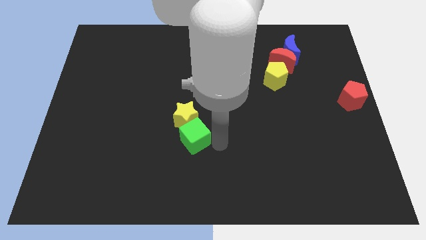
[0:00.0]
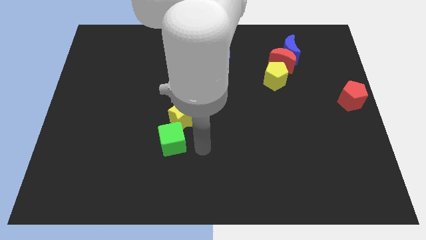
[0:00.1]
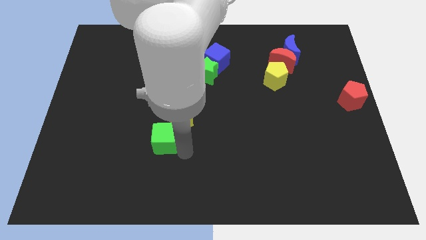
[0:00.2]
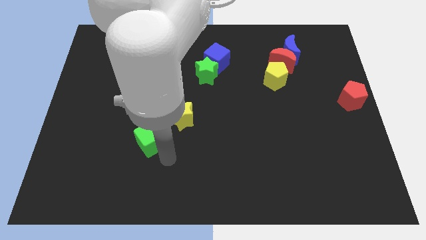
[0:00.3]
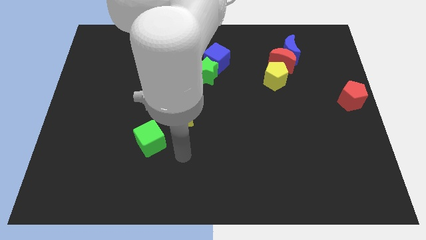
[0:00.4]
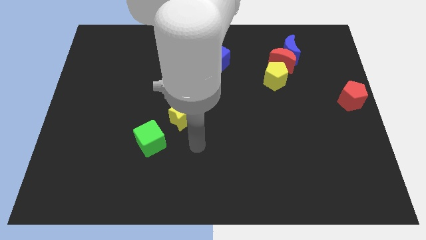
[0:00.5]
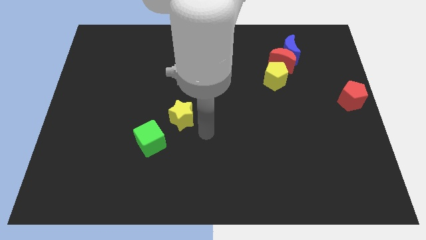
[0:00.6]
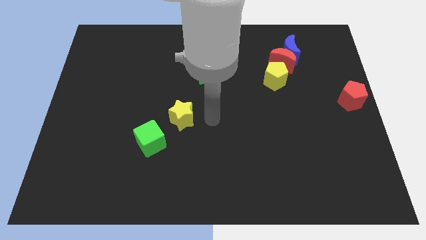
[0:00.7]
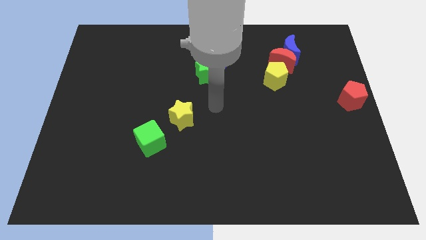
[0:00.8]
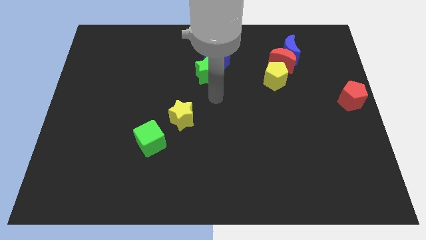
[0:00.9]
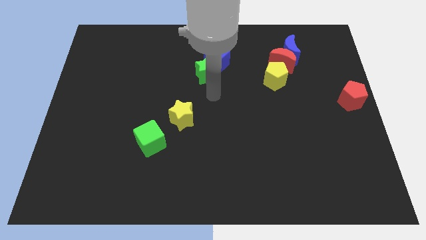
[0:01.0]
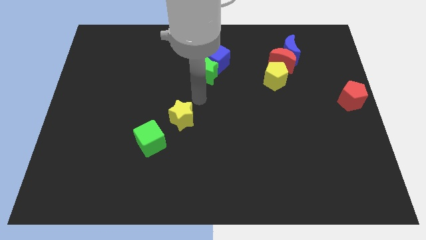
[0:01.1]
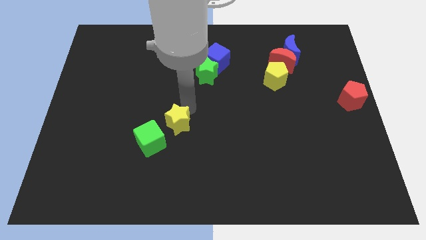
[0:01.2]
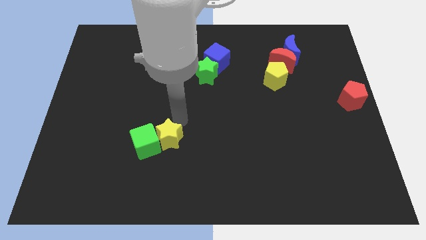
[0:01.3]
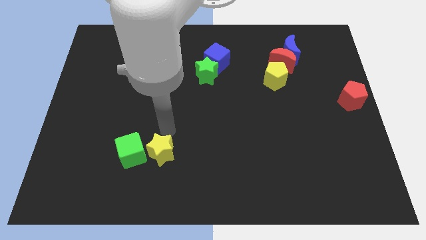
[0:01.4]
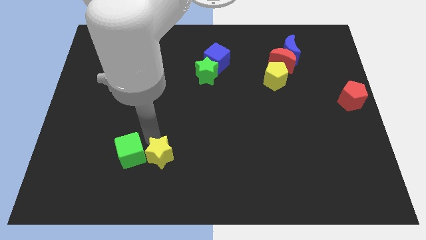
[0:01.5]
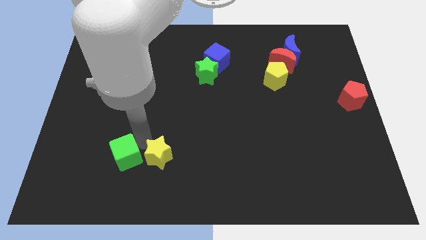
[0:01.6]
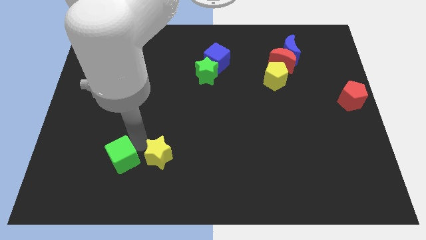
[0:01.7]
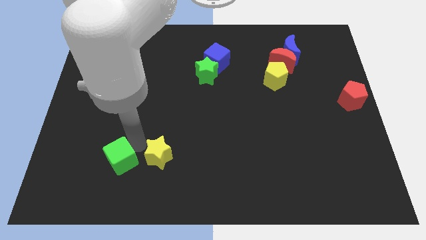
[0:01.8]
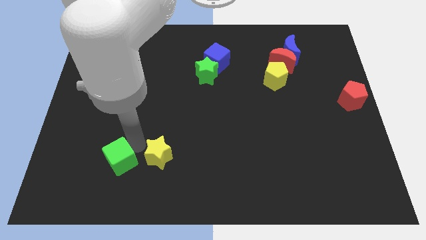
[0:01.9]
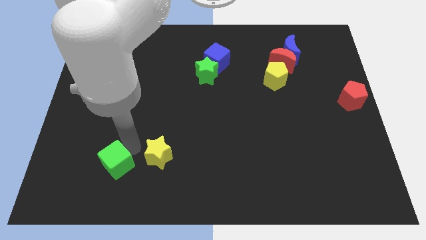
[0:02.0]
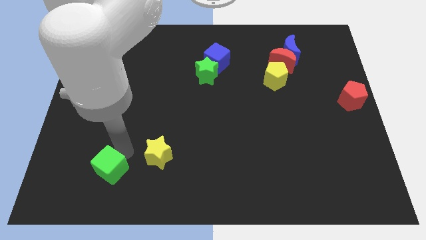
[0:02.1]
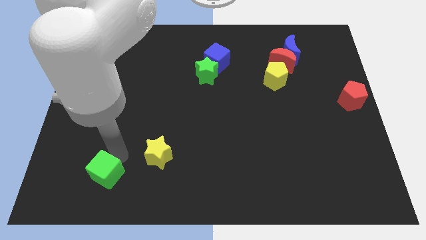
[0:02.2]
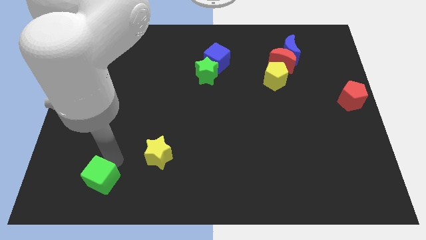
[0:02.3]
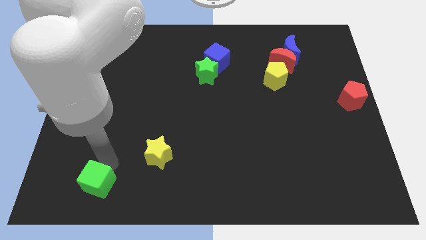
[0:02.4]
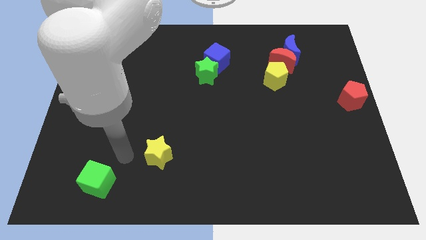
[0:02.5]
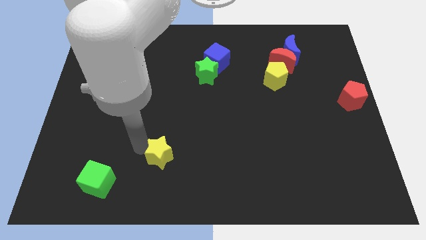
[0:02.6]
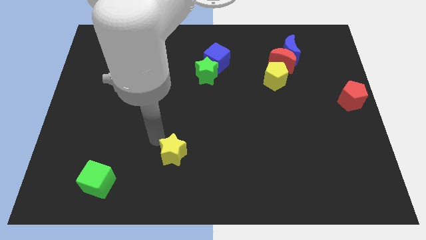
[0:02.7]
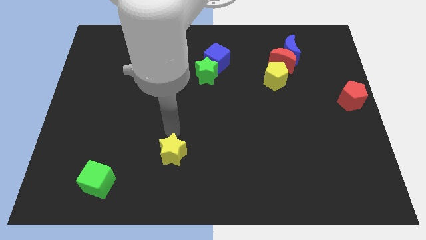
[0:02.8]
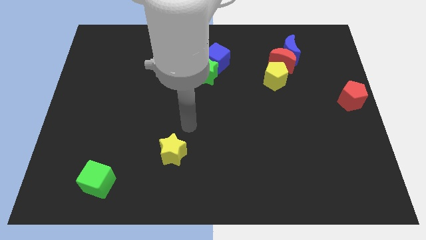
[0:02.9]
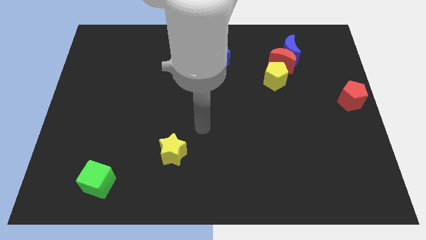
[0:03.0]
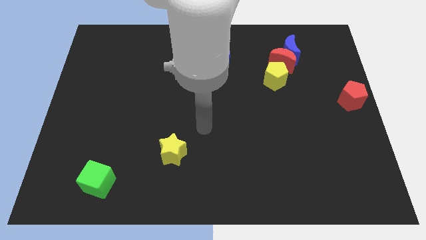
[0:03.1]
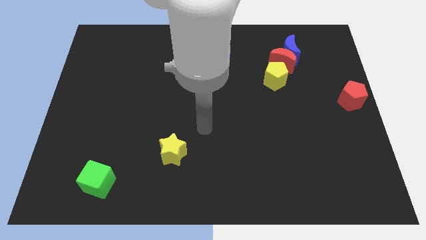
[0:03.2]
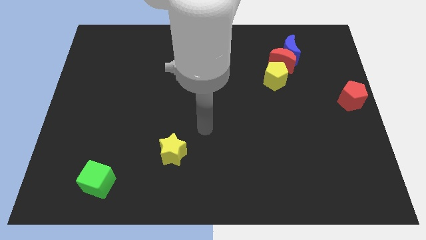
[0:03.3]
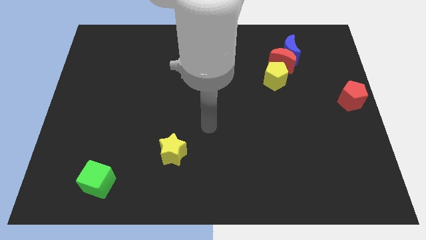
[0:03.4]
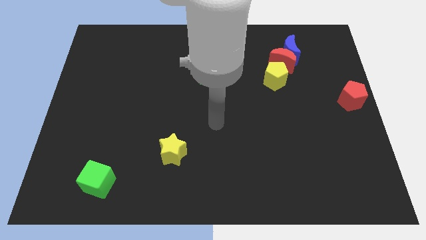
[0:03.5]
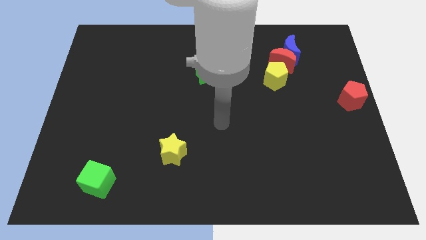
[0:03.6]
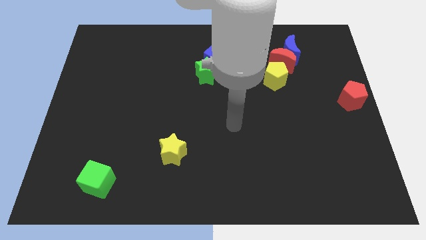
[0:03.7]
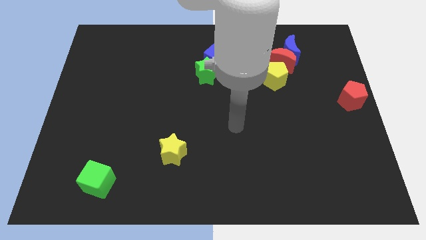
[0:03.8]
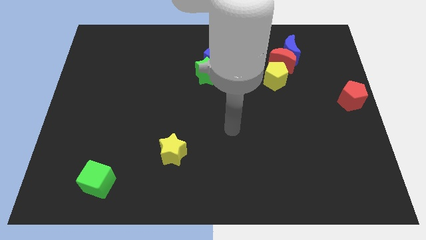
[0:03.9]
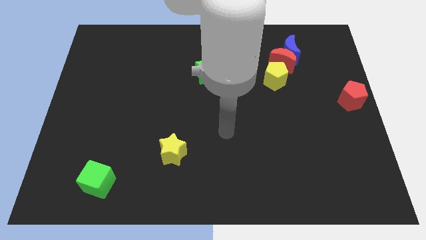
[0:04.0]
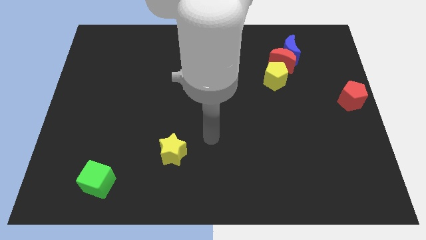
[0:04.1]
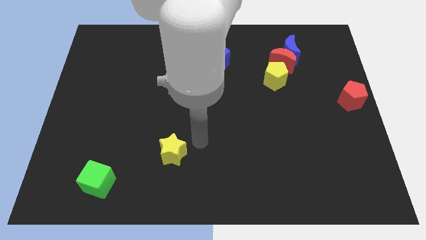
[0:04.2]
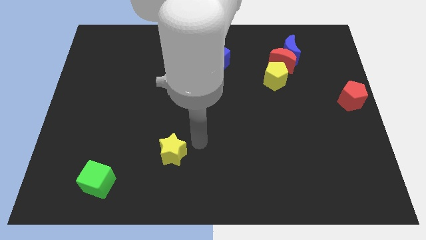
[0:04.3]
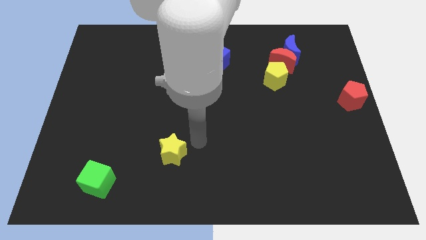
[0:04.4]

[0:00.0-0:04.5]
separate the green cube and the yellow star

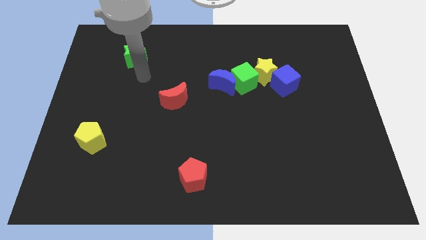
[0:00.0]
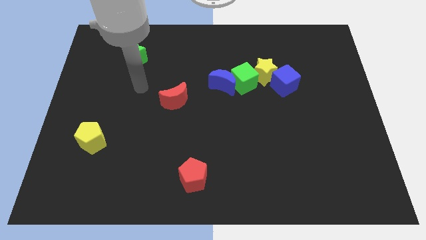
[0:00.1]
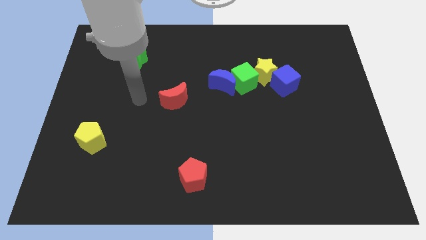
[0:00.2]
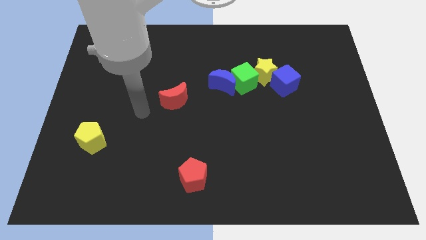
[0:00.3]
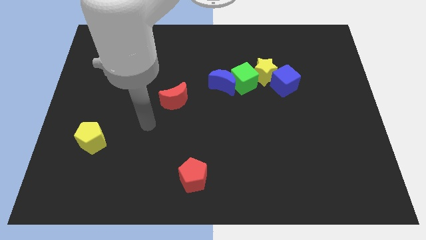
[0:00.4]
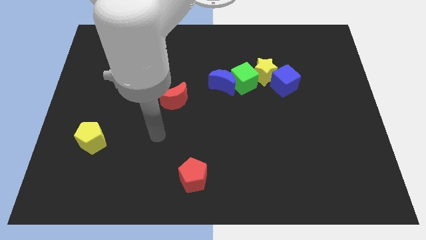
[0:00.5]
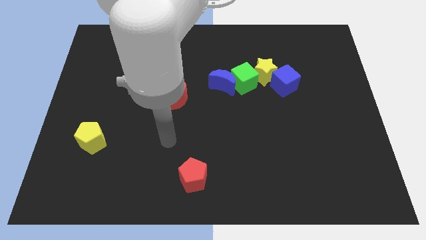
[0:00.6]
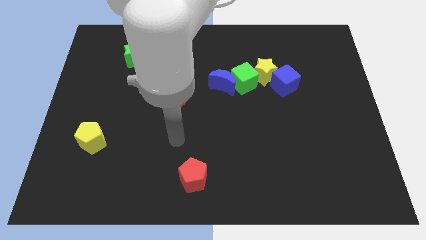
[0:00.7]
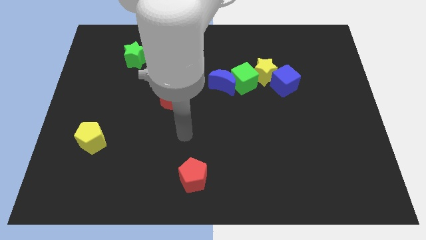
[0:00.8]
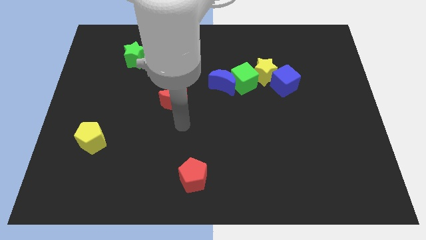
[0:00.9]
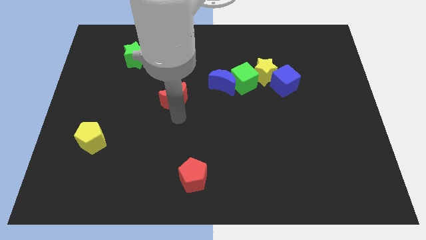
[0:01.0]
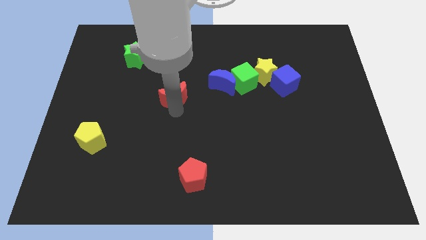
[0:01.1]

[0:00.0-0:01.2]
move your arm to the bottom of red moon

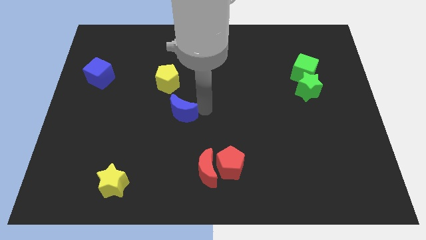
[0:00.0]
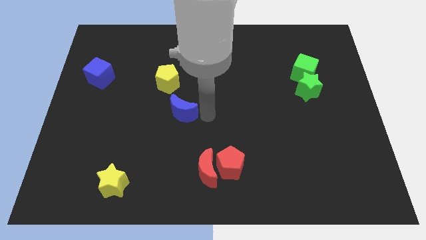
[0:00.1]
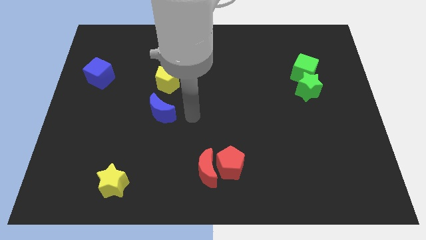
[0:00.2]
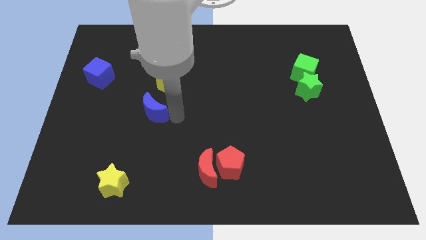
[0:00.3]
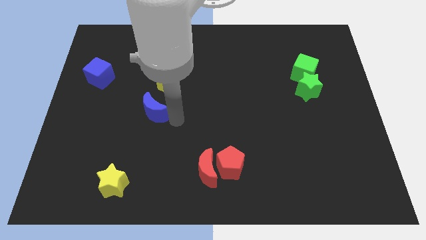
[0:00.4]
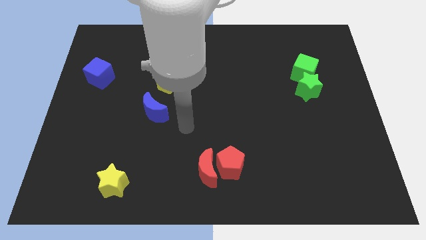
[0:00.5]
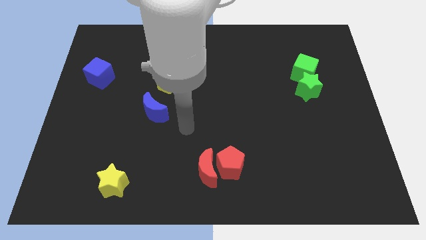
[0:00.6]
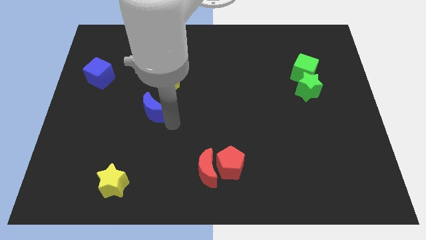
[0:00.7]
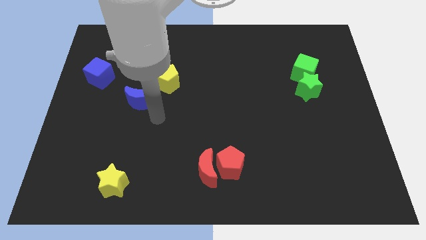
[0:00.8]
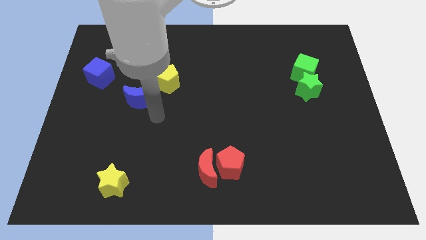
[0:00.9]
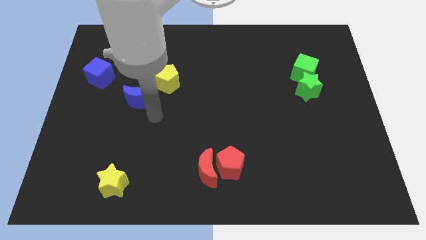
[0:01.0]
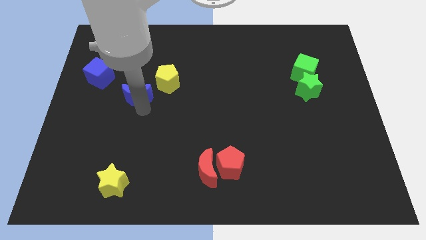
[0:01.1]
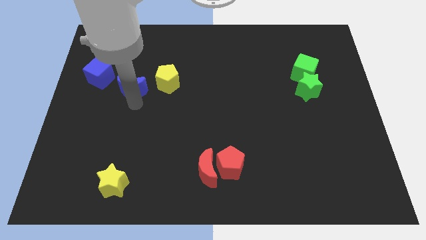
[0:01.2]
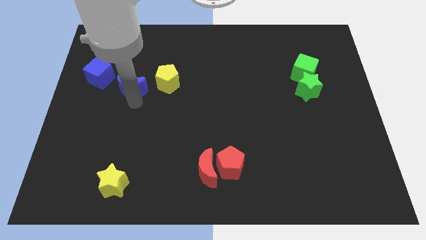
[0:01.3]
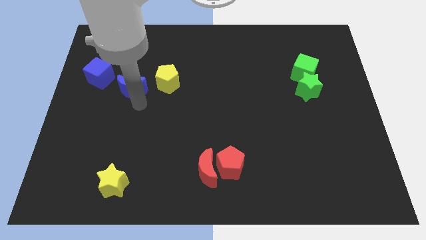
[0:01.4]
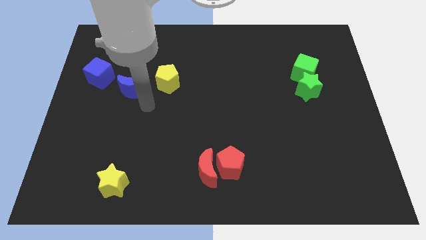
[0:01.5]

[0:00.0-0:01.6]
place the blue crescent to the right of the blue cube

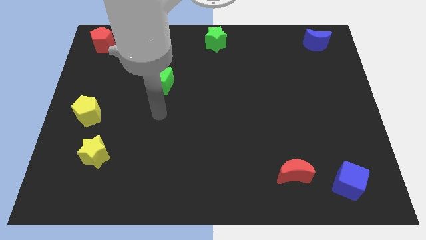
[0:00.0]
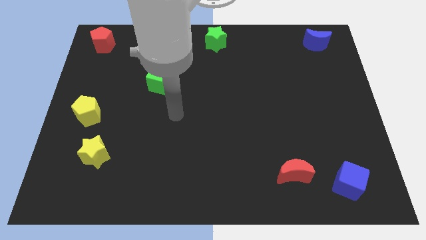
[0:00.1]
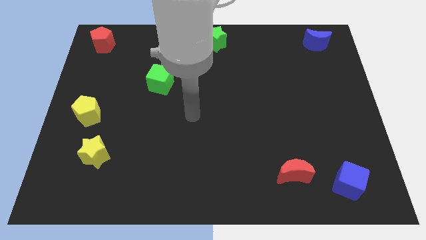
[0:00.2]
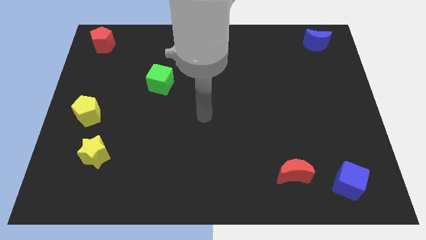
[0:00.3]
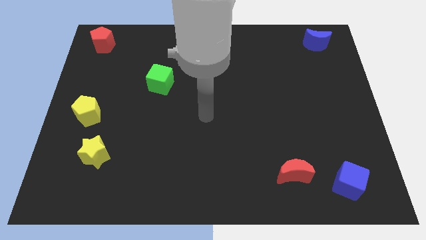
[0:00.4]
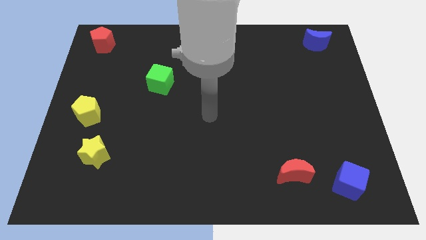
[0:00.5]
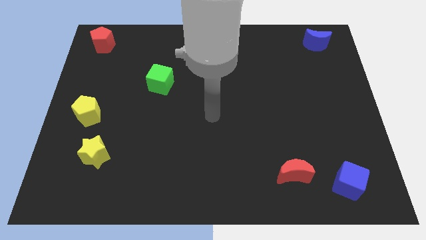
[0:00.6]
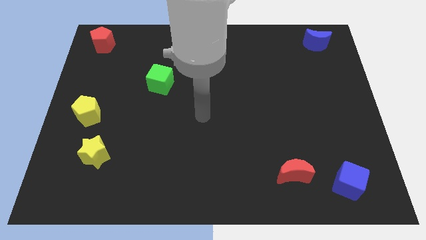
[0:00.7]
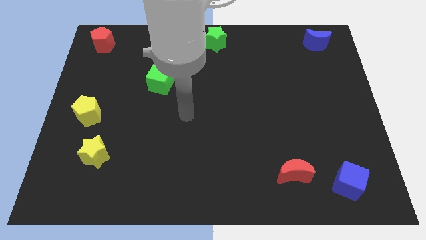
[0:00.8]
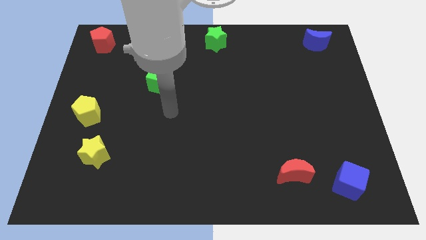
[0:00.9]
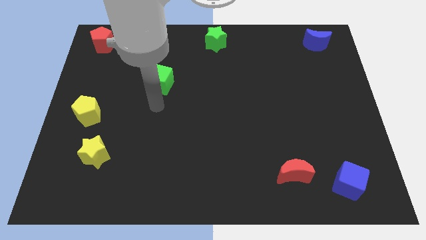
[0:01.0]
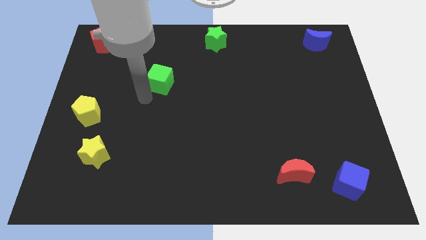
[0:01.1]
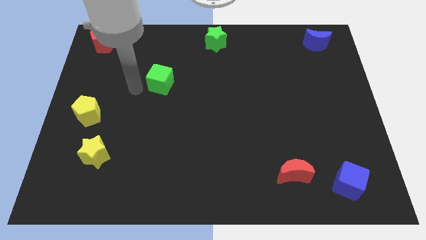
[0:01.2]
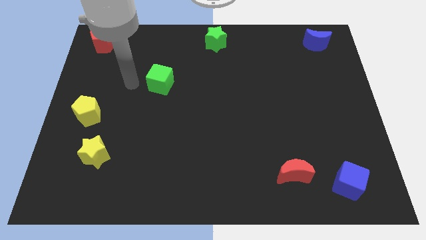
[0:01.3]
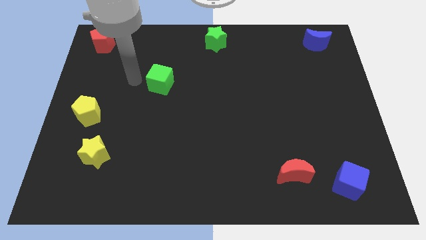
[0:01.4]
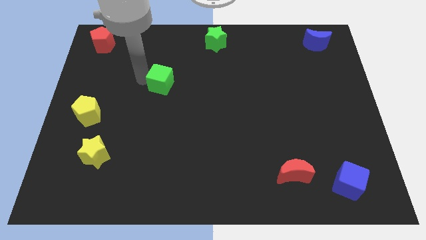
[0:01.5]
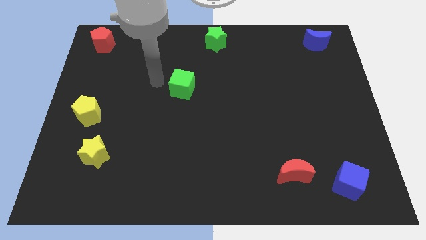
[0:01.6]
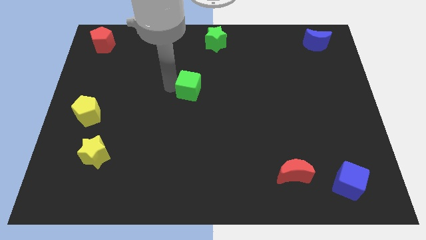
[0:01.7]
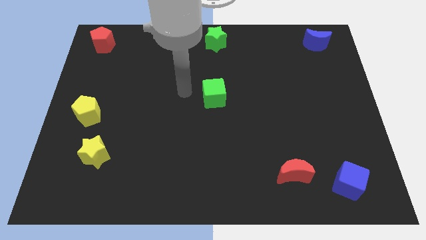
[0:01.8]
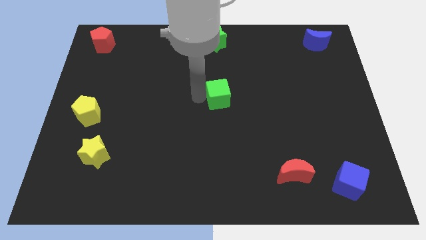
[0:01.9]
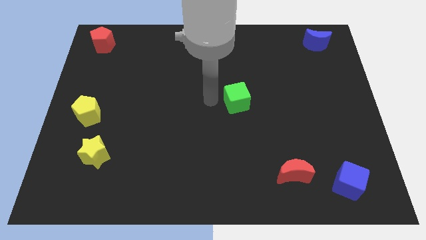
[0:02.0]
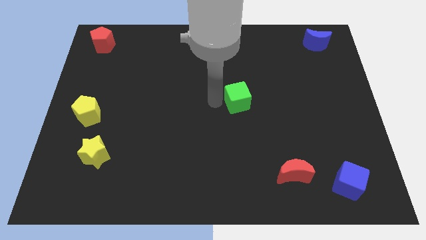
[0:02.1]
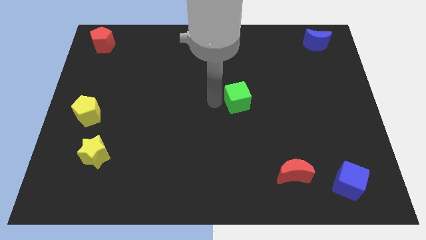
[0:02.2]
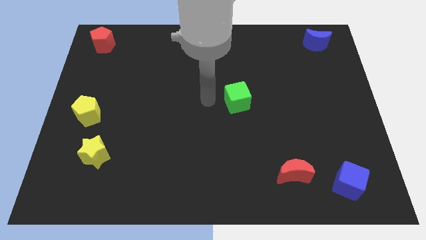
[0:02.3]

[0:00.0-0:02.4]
drag green cube towards right side of the board
